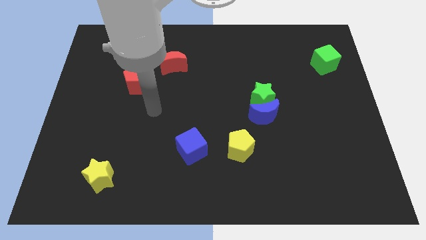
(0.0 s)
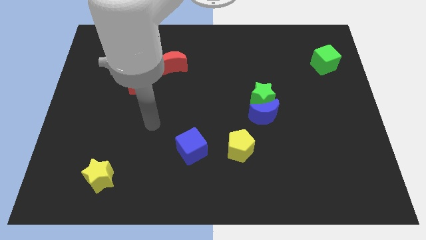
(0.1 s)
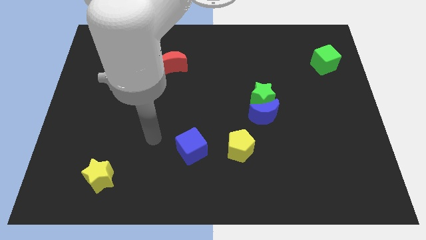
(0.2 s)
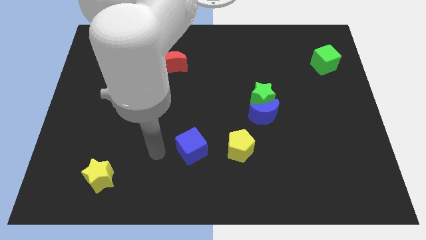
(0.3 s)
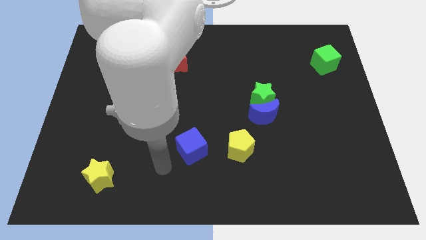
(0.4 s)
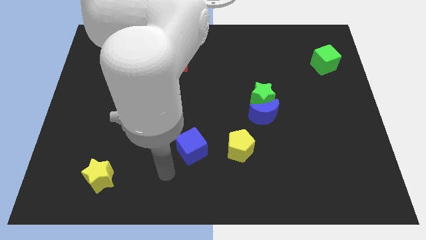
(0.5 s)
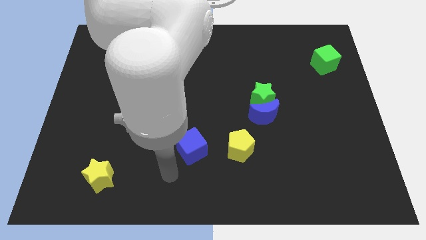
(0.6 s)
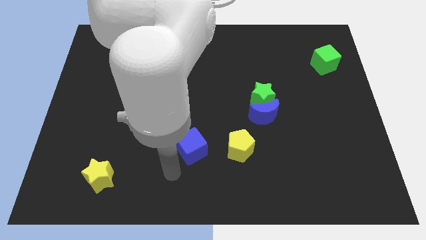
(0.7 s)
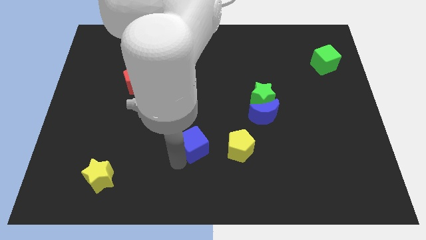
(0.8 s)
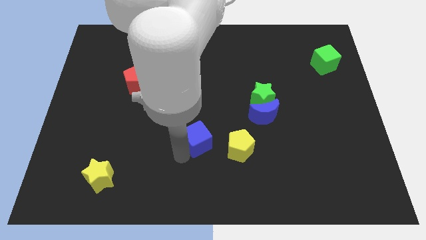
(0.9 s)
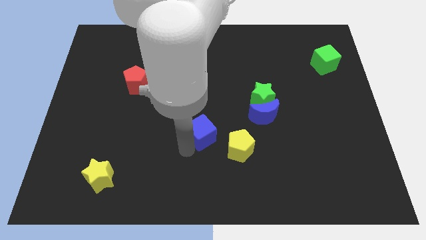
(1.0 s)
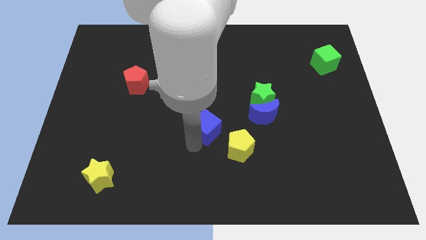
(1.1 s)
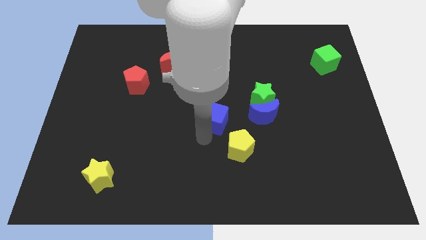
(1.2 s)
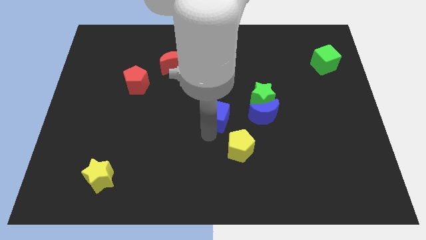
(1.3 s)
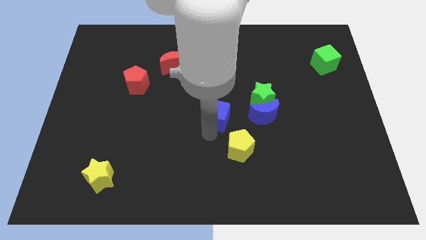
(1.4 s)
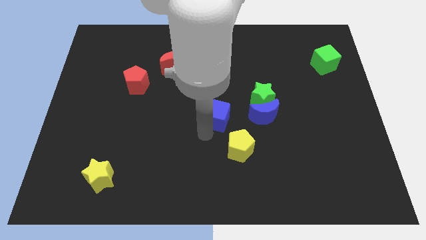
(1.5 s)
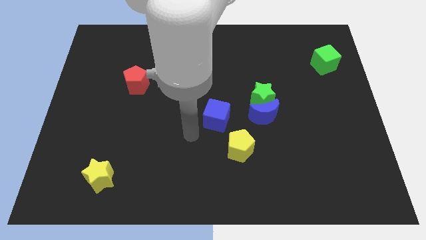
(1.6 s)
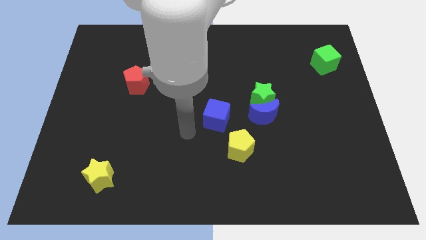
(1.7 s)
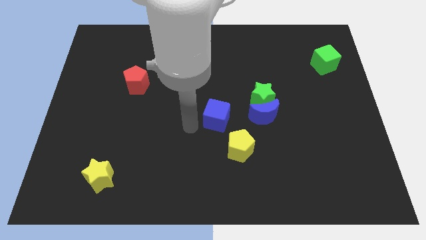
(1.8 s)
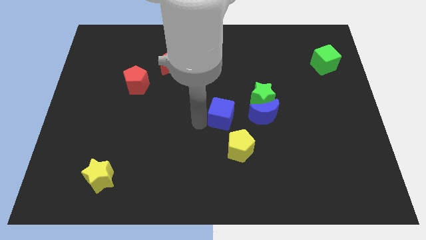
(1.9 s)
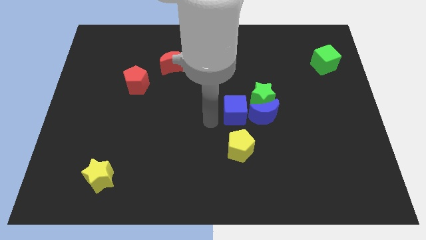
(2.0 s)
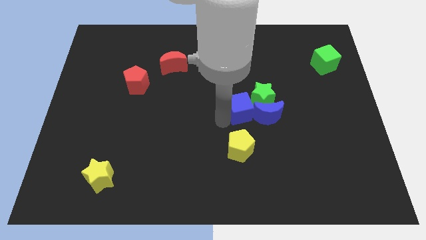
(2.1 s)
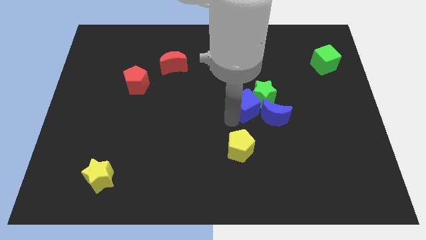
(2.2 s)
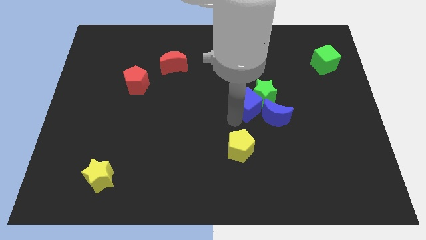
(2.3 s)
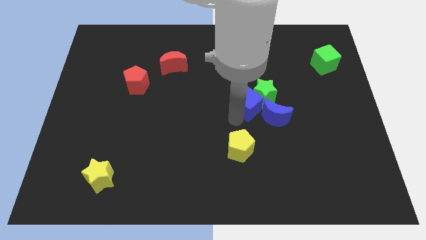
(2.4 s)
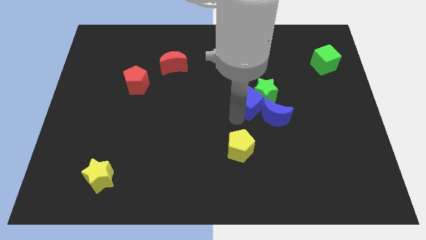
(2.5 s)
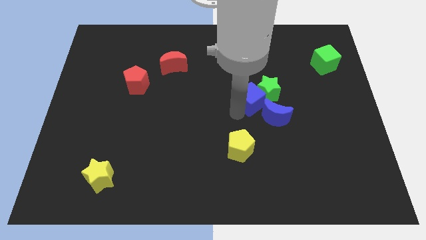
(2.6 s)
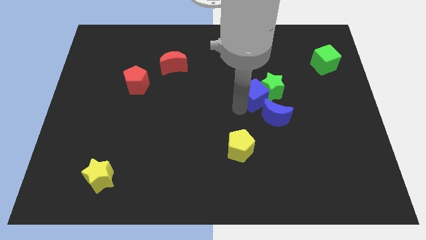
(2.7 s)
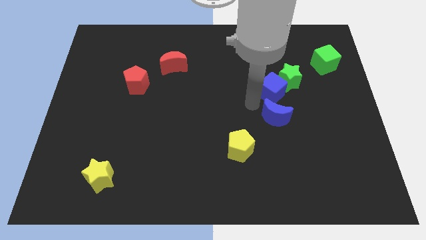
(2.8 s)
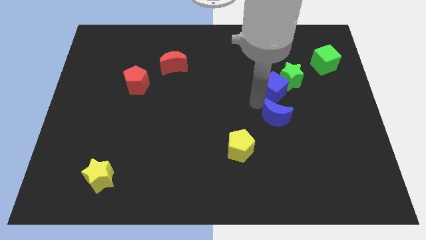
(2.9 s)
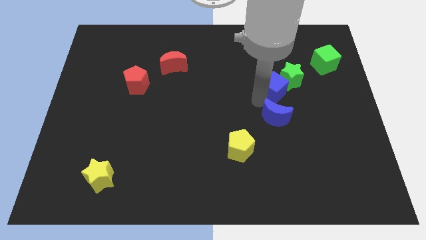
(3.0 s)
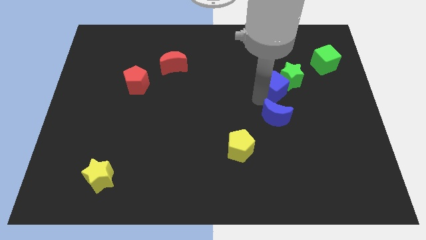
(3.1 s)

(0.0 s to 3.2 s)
push the blue blocks and green star towards the green cube

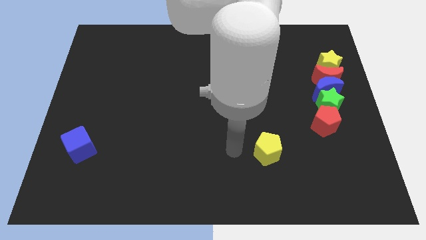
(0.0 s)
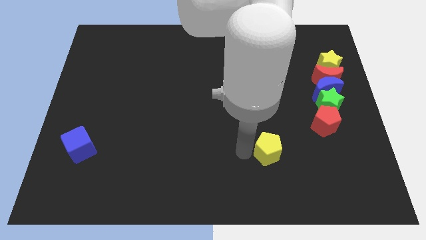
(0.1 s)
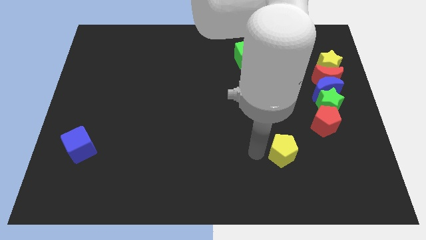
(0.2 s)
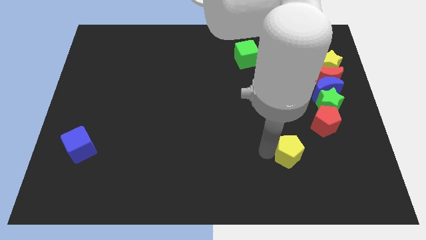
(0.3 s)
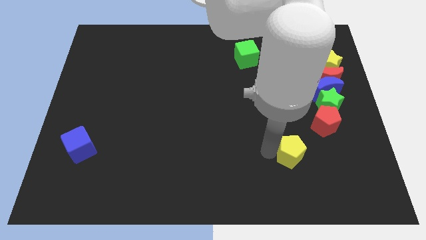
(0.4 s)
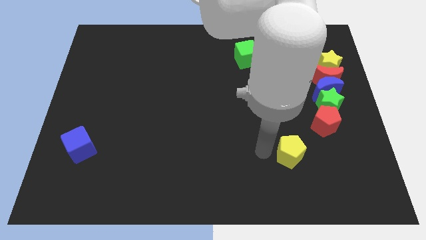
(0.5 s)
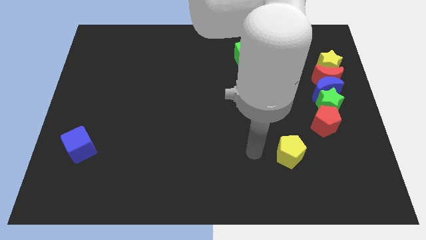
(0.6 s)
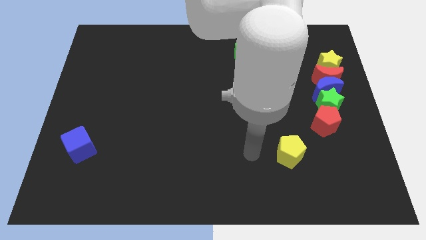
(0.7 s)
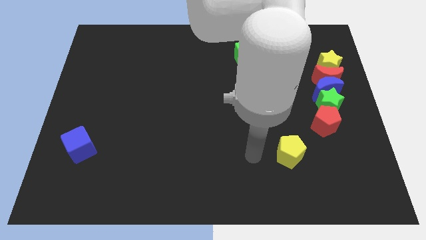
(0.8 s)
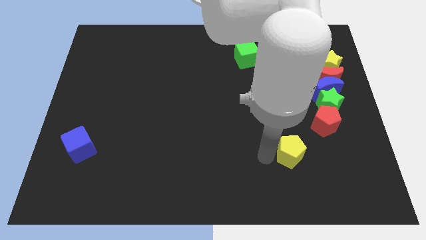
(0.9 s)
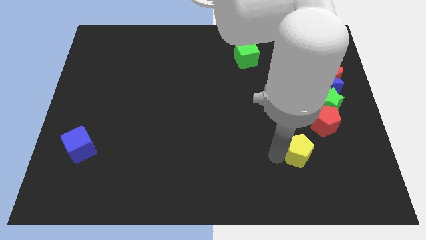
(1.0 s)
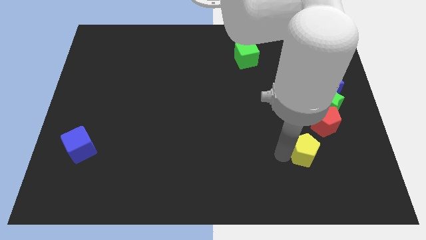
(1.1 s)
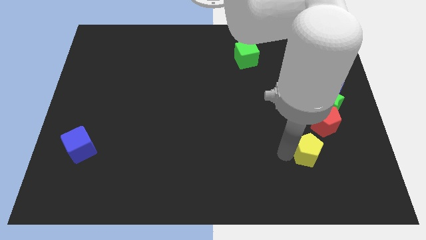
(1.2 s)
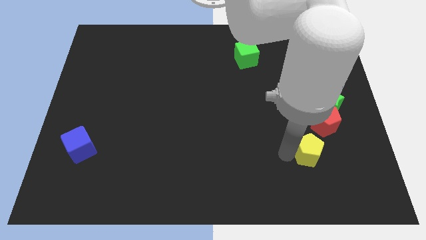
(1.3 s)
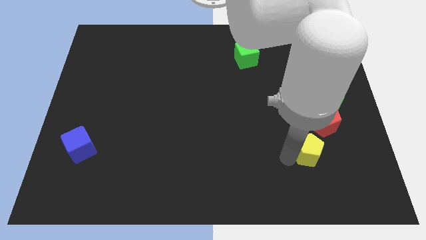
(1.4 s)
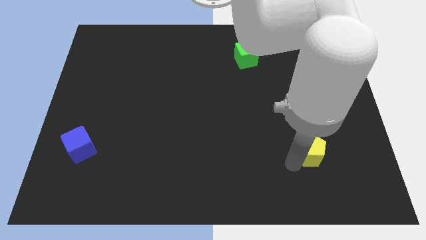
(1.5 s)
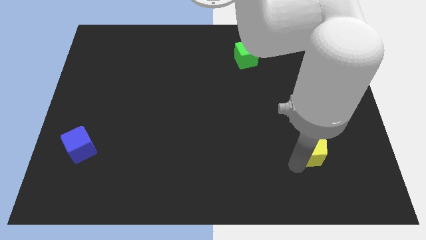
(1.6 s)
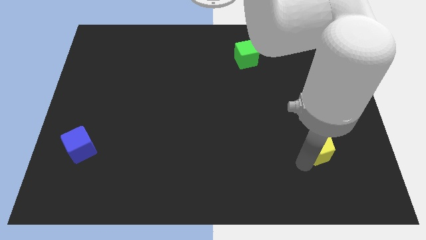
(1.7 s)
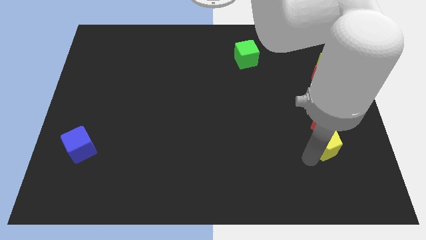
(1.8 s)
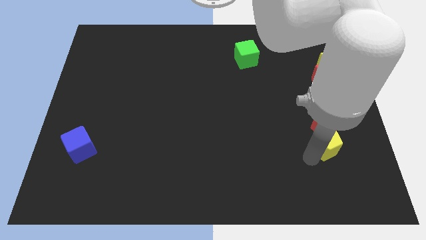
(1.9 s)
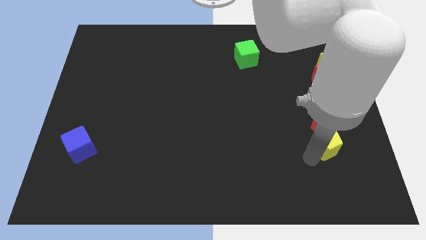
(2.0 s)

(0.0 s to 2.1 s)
move the yellow pentagon below the red pentagon

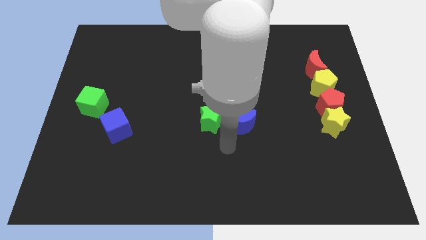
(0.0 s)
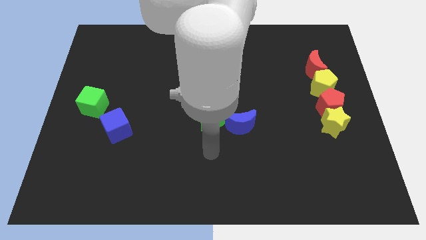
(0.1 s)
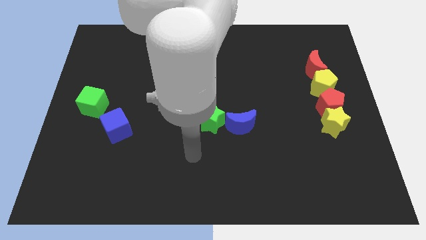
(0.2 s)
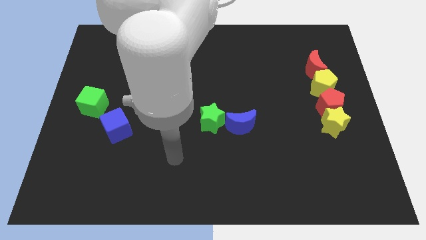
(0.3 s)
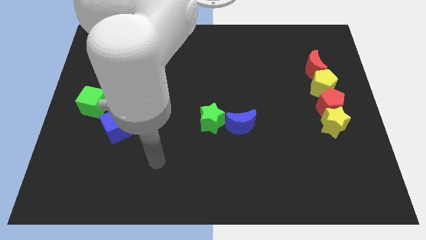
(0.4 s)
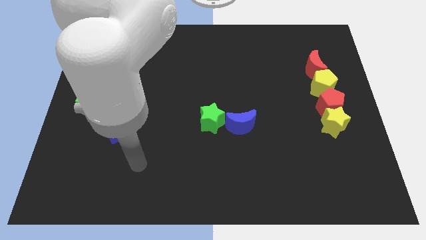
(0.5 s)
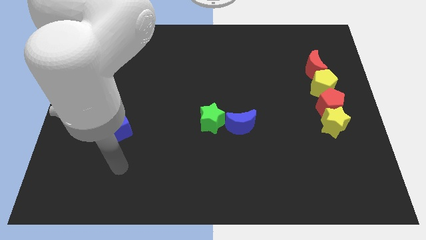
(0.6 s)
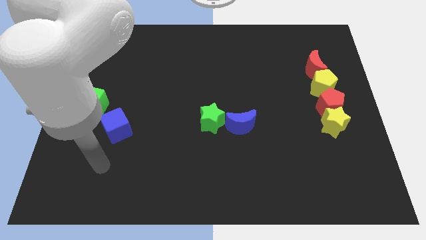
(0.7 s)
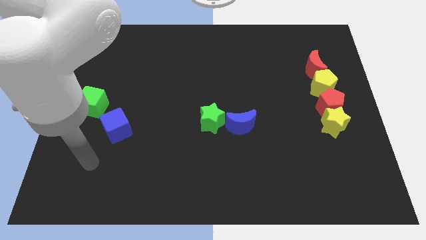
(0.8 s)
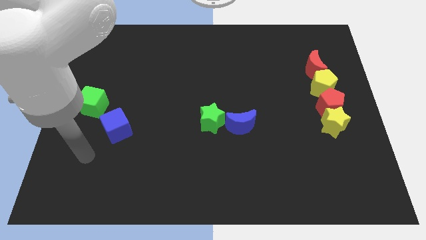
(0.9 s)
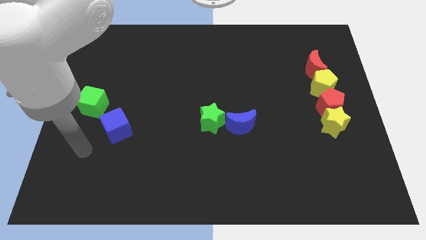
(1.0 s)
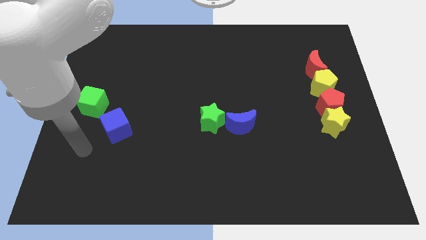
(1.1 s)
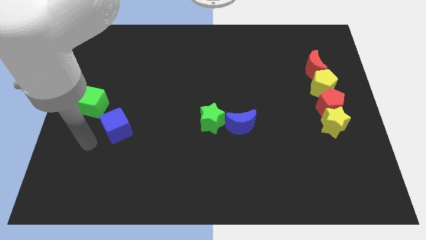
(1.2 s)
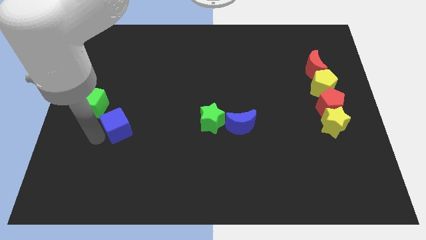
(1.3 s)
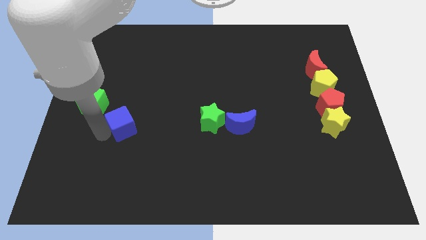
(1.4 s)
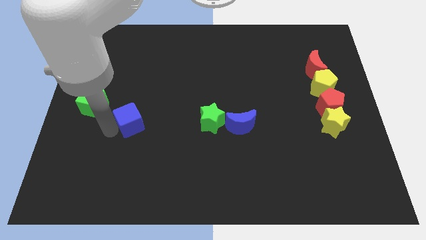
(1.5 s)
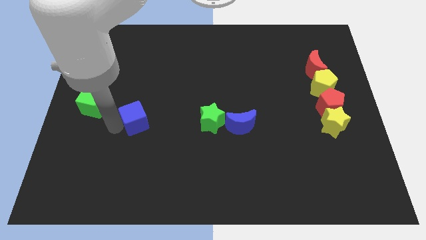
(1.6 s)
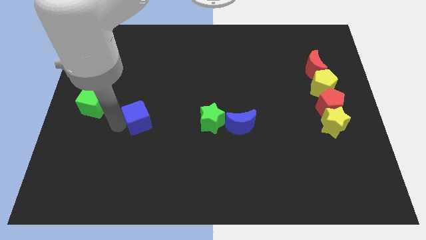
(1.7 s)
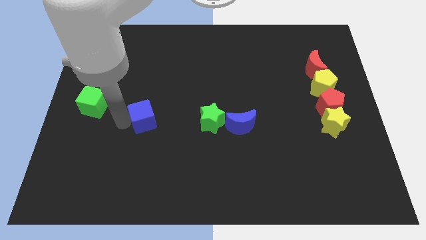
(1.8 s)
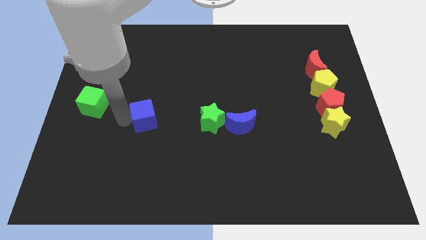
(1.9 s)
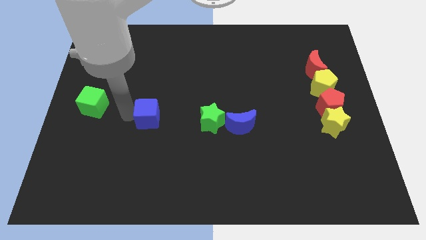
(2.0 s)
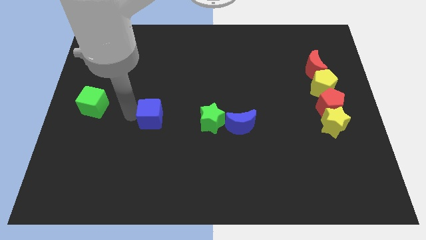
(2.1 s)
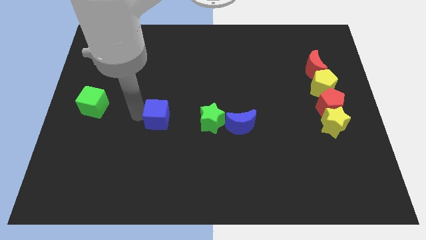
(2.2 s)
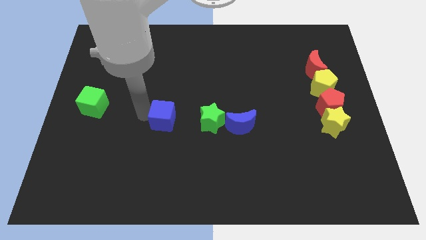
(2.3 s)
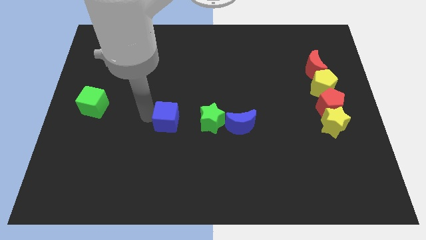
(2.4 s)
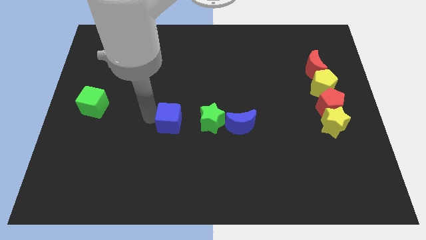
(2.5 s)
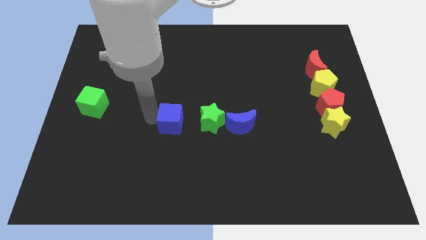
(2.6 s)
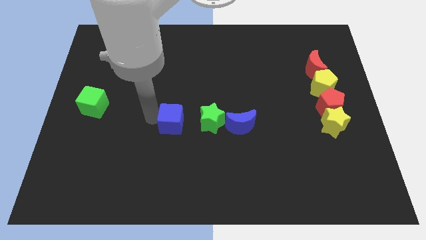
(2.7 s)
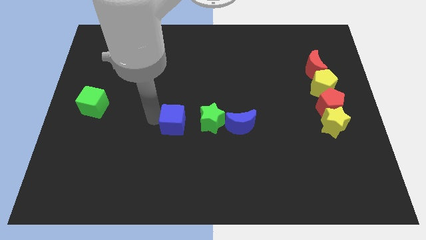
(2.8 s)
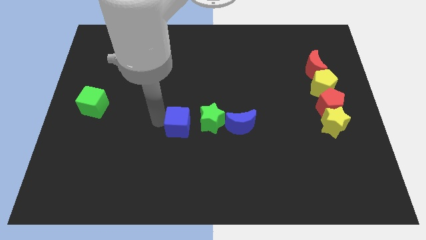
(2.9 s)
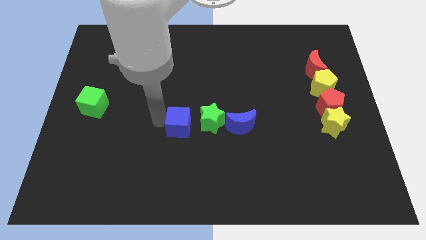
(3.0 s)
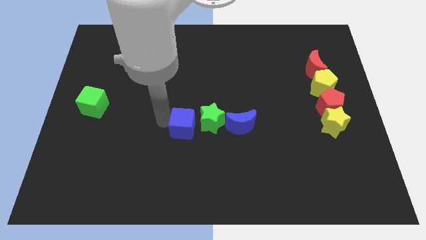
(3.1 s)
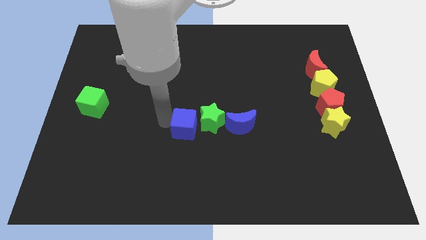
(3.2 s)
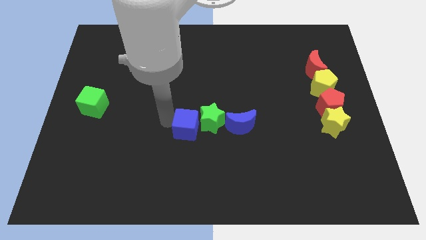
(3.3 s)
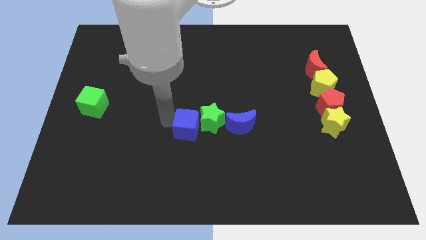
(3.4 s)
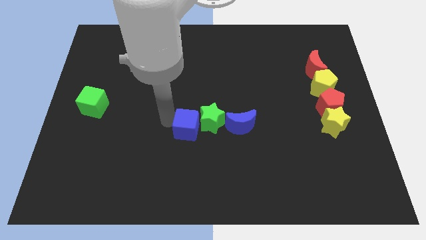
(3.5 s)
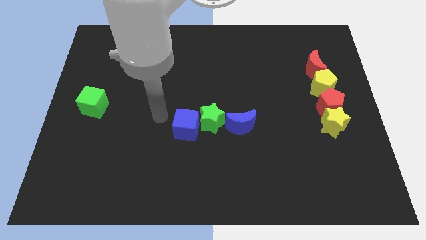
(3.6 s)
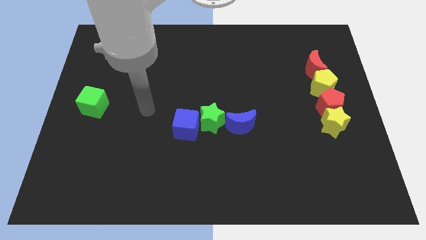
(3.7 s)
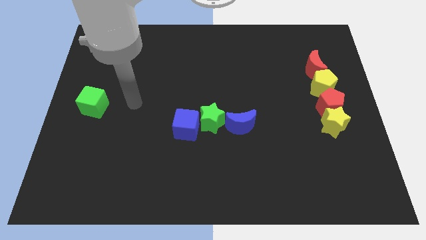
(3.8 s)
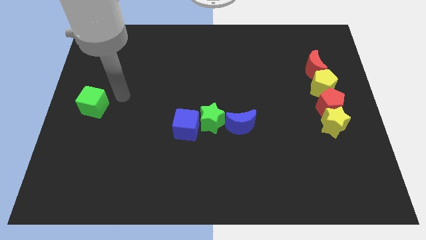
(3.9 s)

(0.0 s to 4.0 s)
slide the blue cube to the left side of the green star
